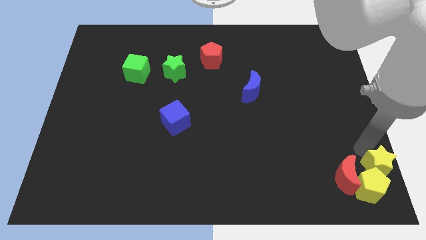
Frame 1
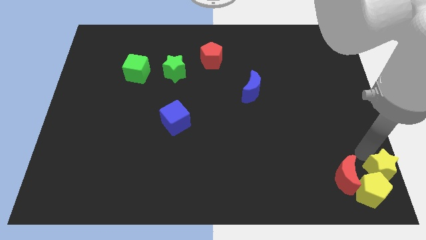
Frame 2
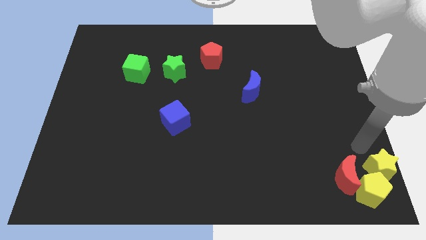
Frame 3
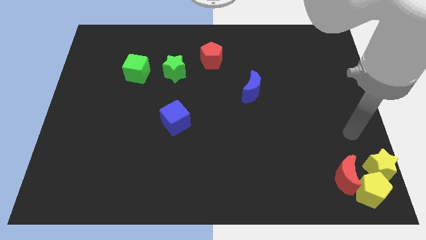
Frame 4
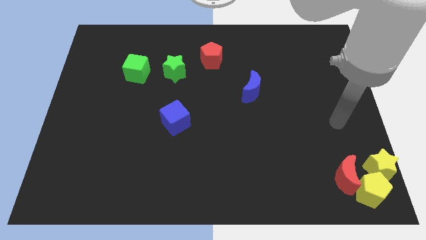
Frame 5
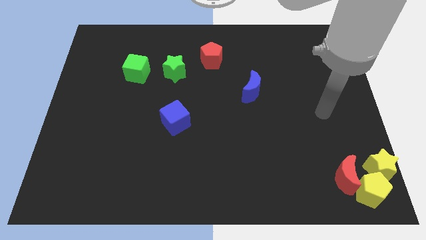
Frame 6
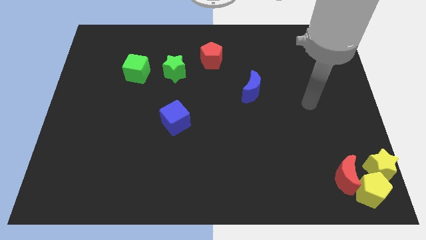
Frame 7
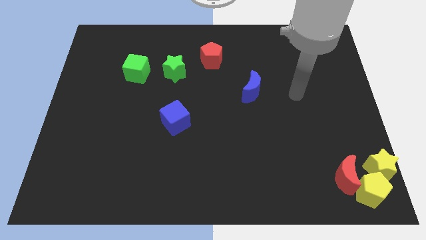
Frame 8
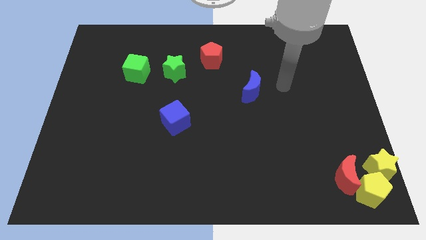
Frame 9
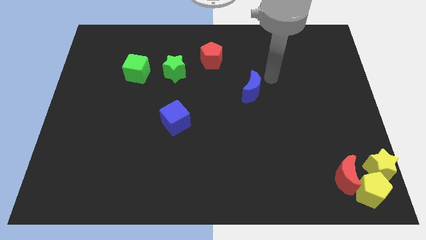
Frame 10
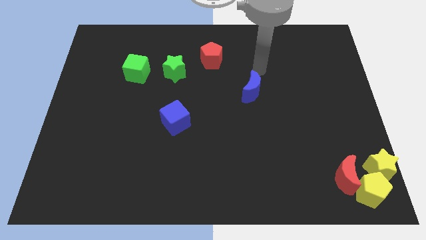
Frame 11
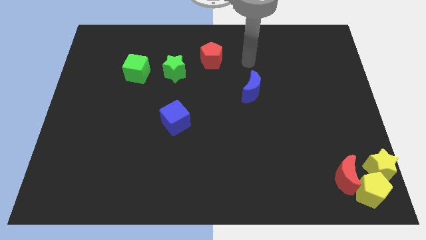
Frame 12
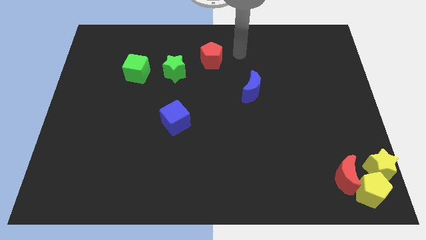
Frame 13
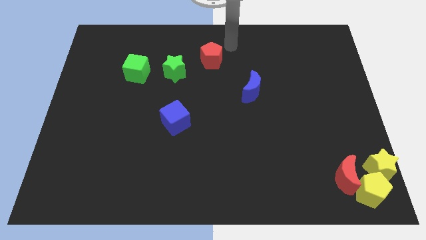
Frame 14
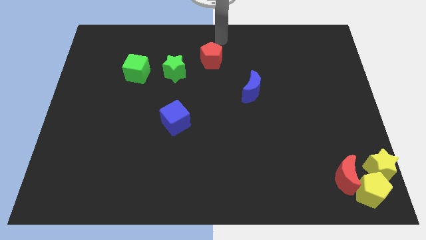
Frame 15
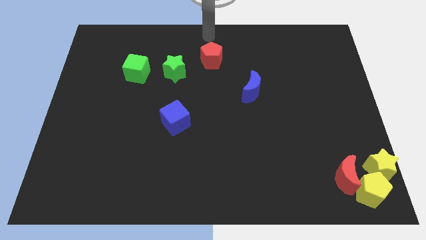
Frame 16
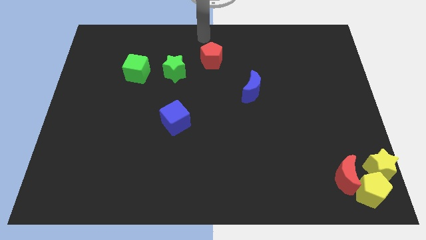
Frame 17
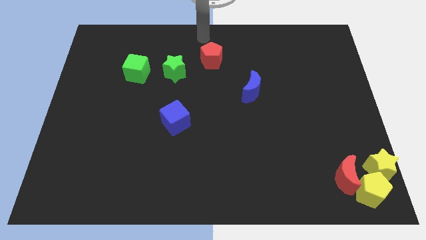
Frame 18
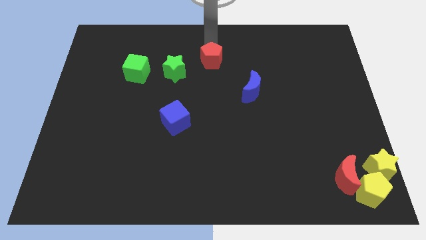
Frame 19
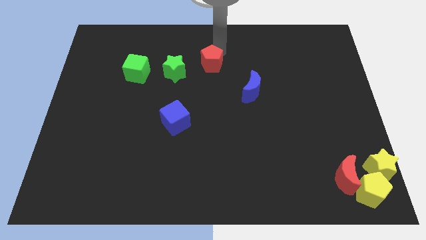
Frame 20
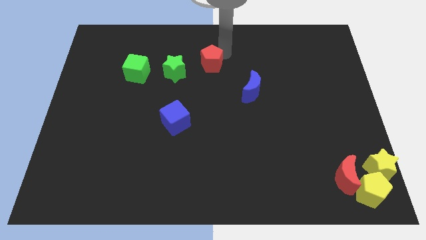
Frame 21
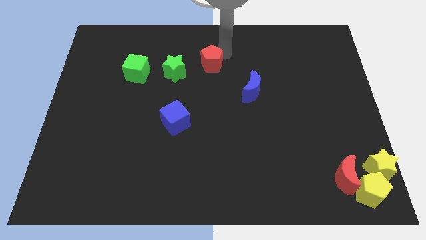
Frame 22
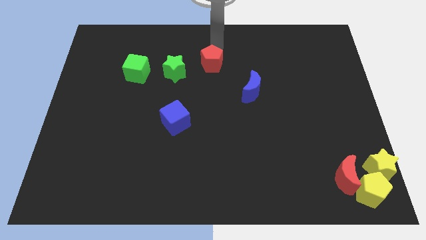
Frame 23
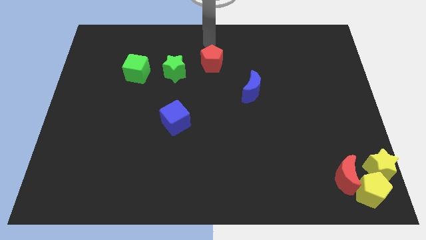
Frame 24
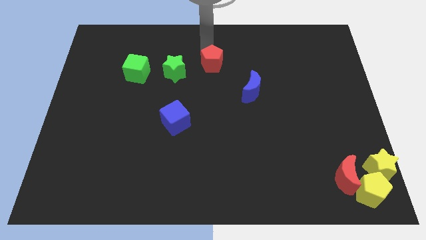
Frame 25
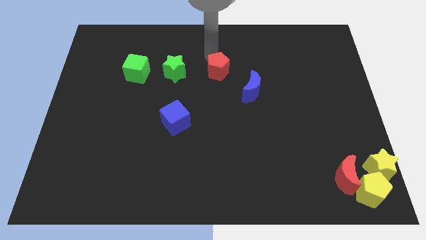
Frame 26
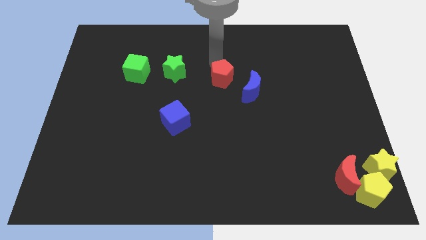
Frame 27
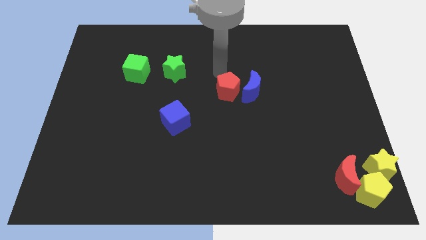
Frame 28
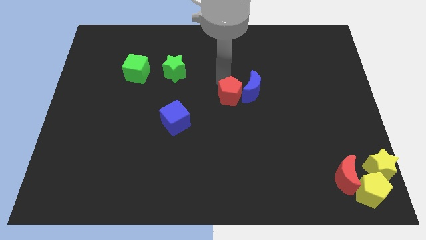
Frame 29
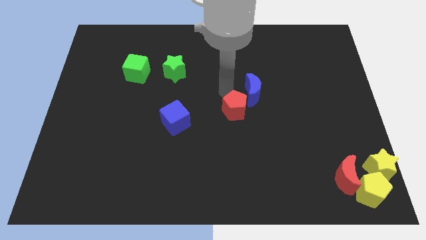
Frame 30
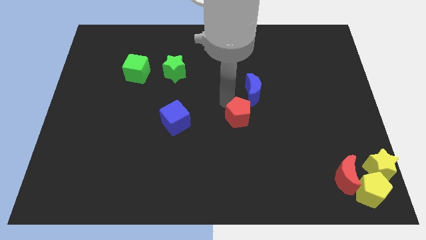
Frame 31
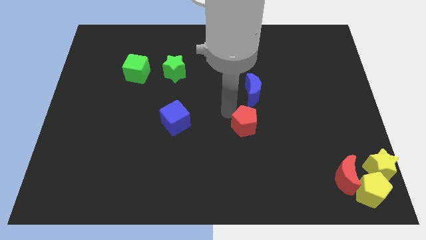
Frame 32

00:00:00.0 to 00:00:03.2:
slide the red pentagon horizontally on the right side of the blue cube

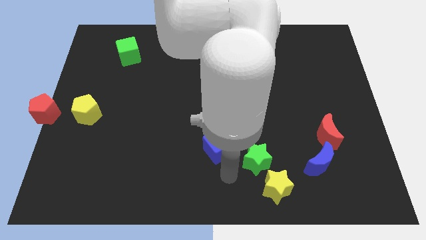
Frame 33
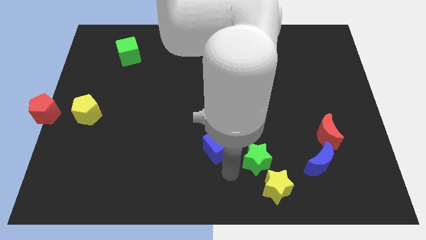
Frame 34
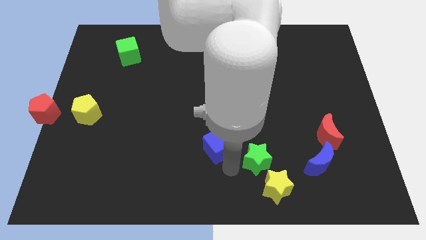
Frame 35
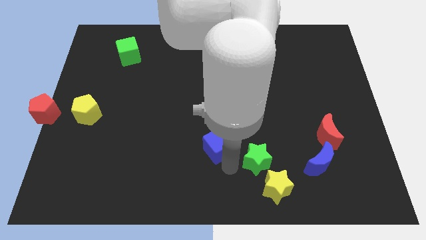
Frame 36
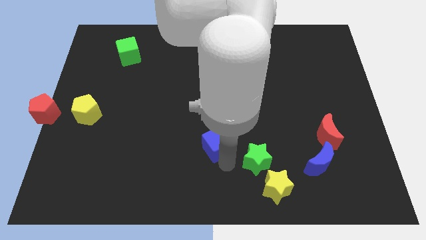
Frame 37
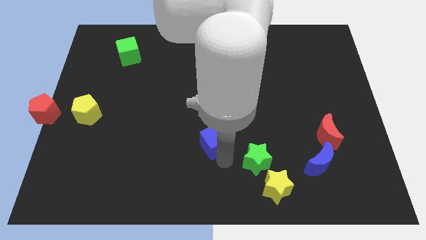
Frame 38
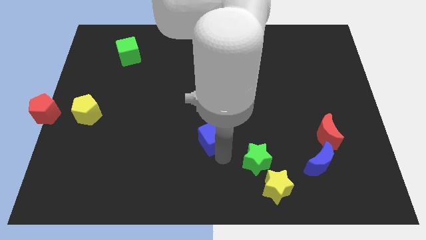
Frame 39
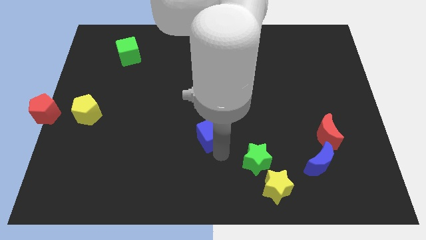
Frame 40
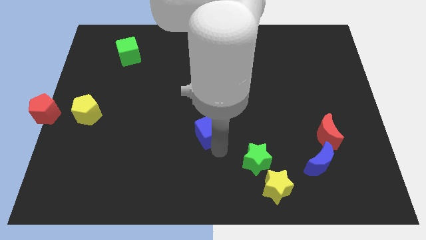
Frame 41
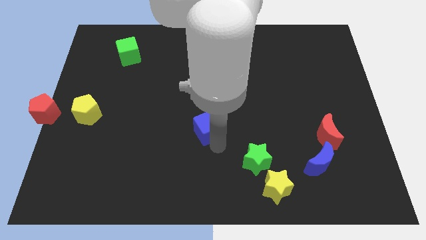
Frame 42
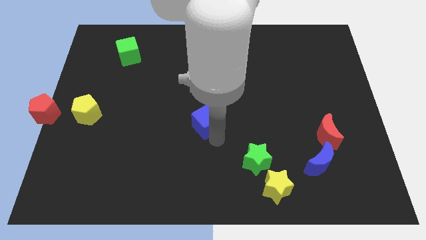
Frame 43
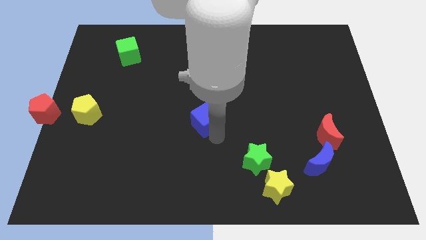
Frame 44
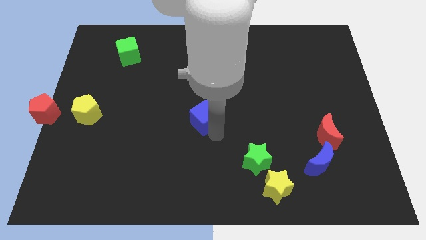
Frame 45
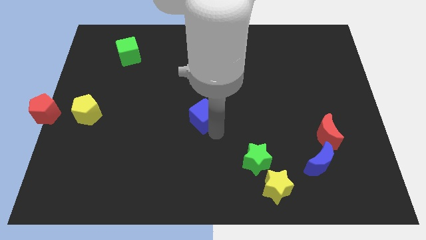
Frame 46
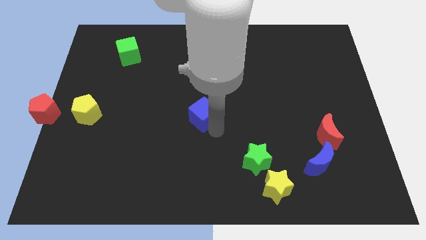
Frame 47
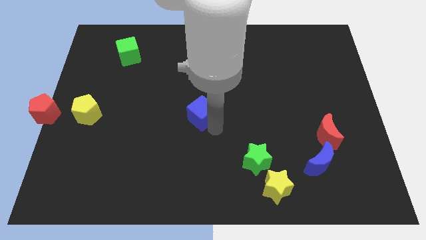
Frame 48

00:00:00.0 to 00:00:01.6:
drag the blue cube parallel to the yellow pentagon

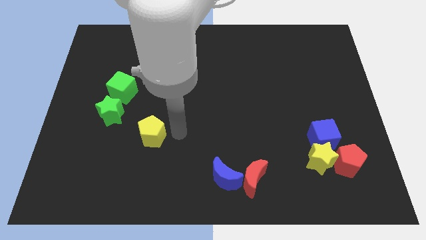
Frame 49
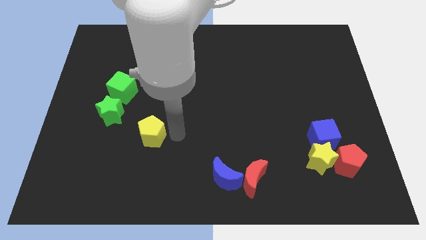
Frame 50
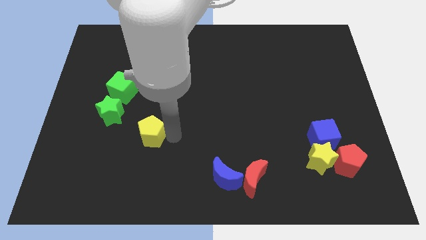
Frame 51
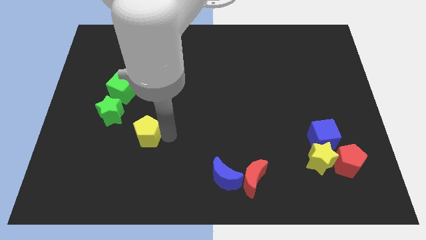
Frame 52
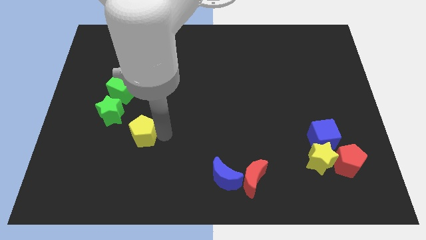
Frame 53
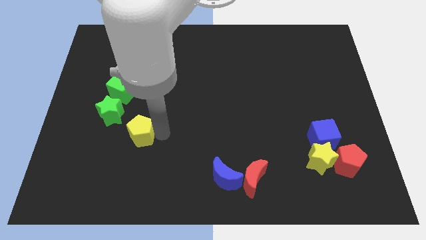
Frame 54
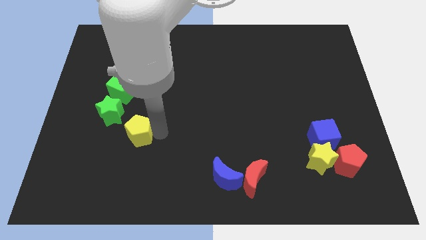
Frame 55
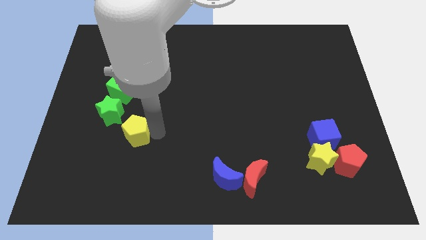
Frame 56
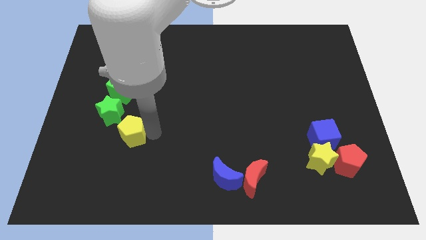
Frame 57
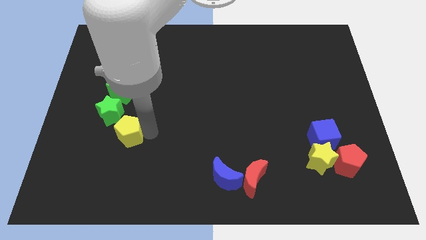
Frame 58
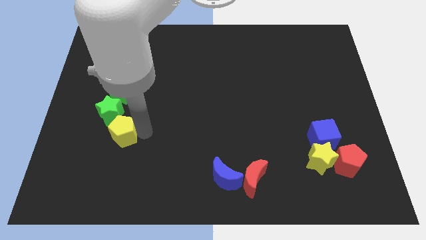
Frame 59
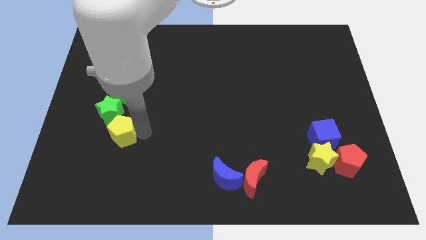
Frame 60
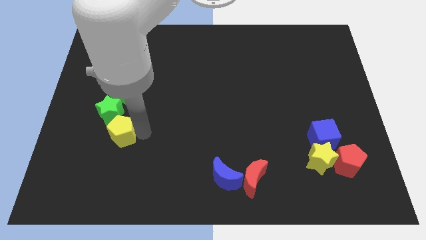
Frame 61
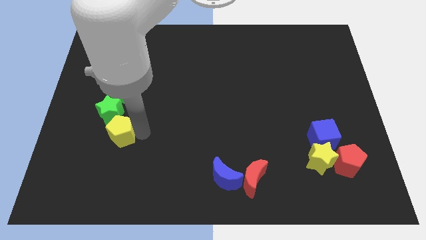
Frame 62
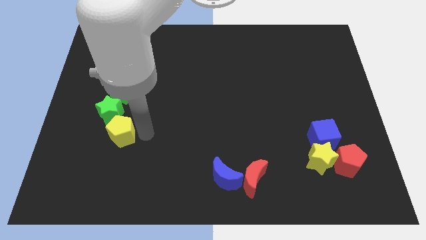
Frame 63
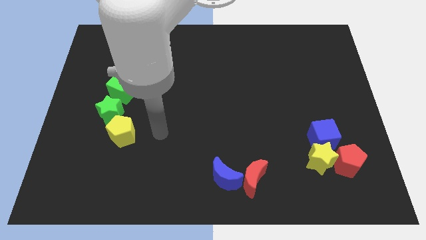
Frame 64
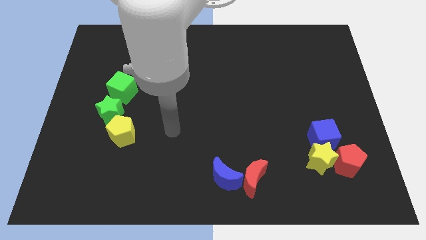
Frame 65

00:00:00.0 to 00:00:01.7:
move the yellow pentagon to the bottom of the green star

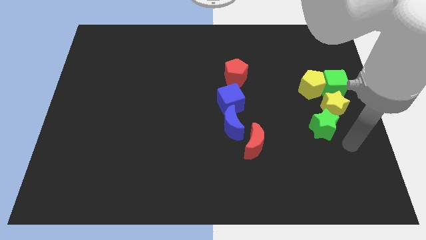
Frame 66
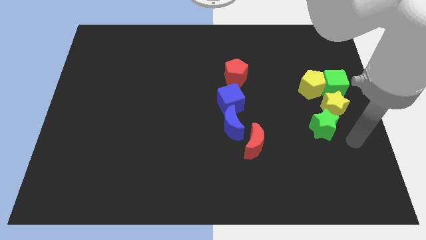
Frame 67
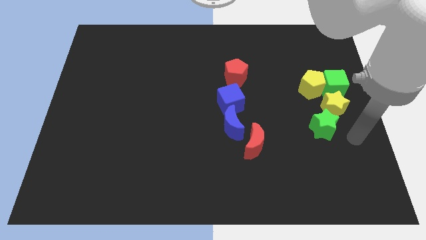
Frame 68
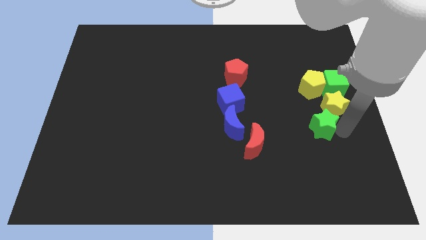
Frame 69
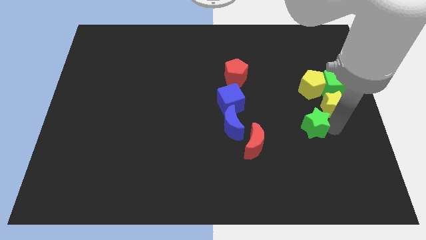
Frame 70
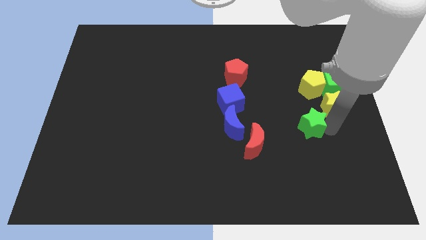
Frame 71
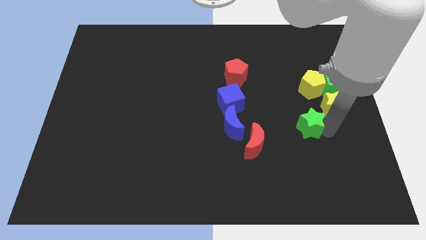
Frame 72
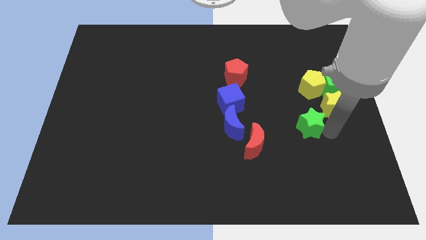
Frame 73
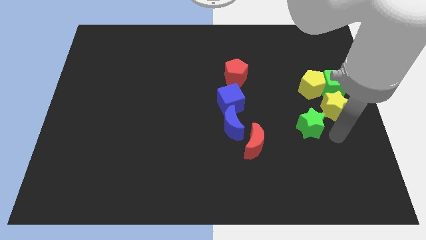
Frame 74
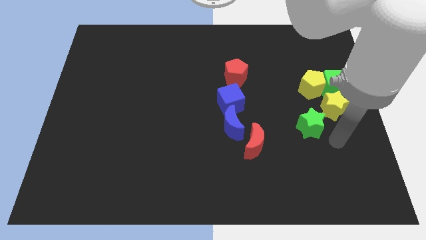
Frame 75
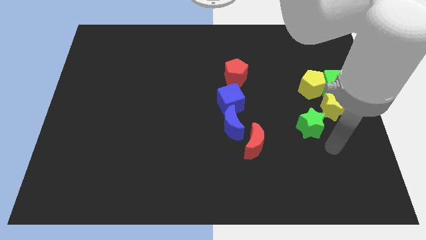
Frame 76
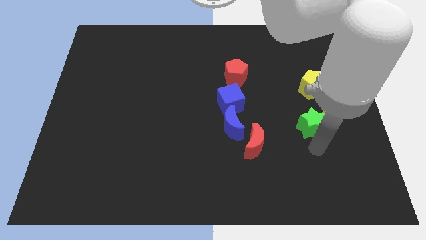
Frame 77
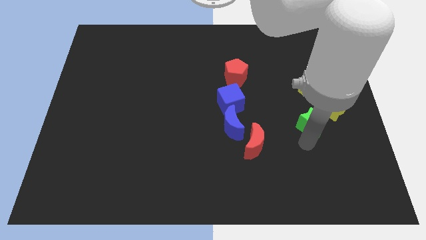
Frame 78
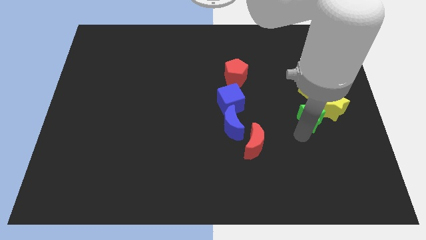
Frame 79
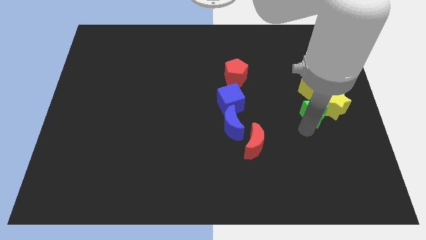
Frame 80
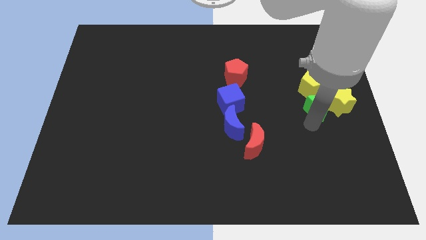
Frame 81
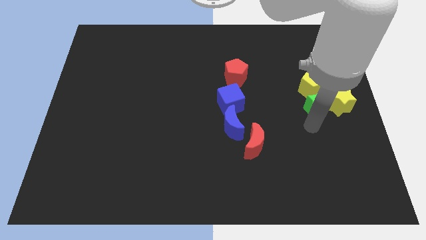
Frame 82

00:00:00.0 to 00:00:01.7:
move the green star to the bottom of the yellow pentagon

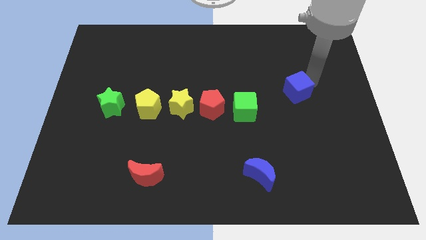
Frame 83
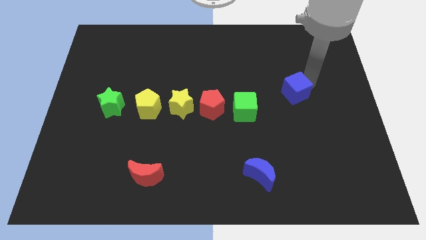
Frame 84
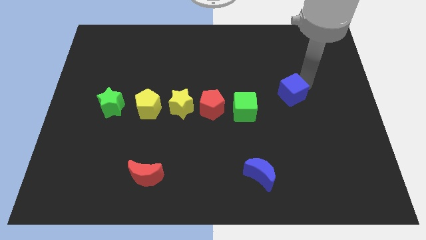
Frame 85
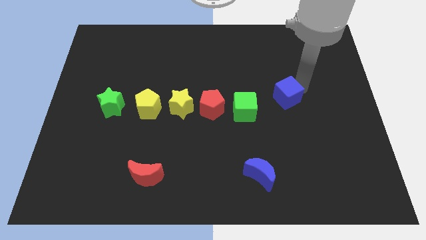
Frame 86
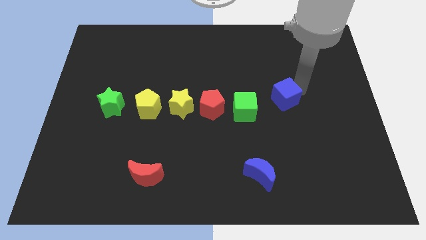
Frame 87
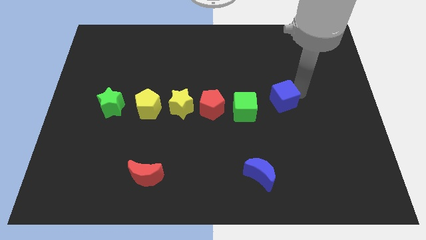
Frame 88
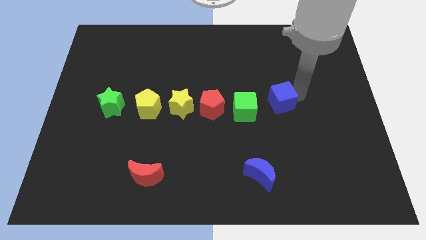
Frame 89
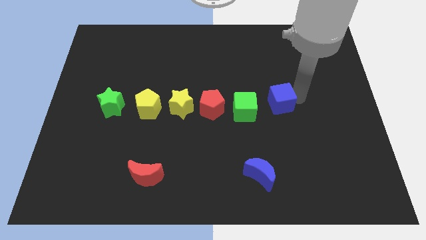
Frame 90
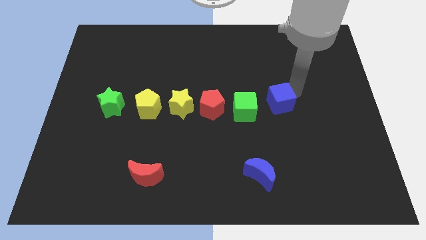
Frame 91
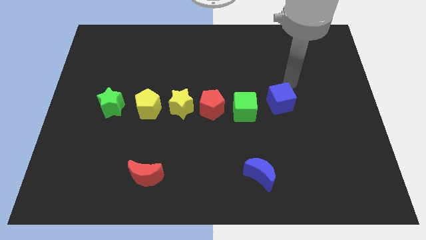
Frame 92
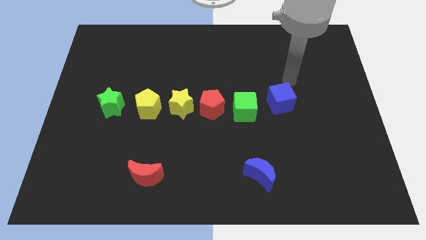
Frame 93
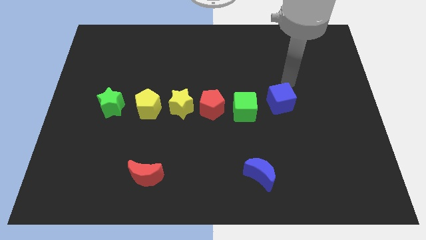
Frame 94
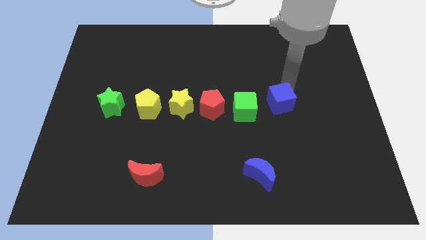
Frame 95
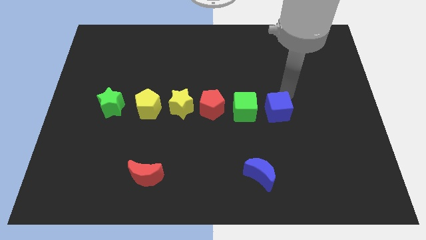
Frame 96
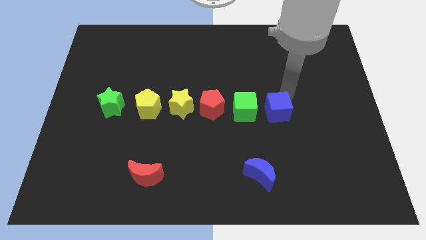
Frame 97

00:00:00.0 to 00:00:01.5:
drag blue cube near green cube
